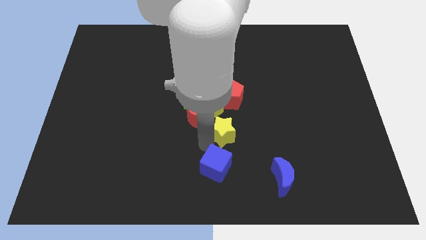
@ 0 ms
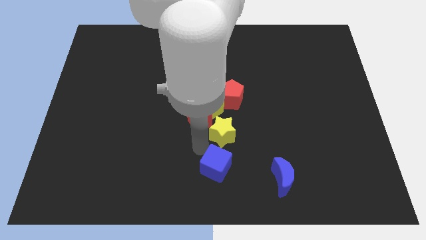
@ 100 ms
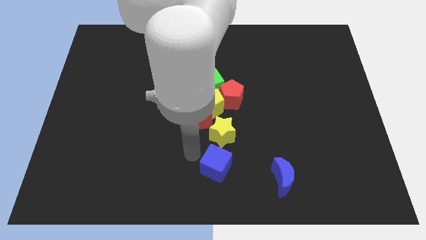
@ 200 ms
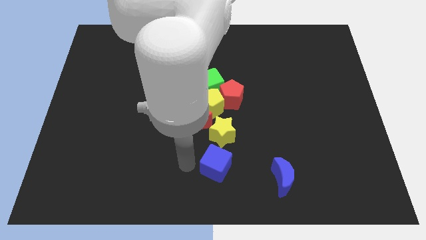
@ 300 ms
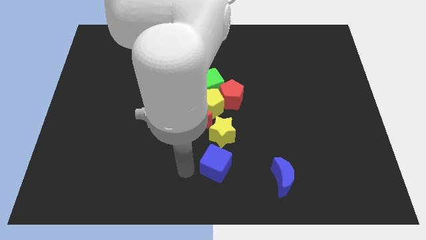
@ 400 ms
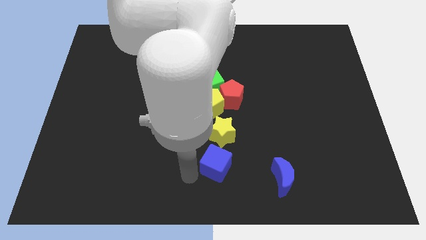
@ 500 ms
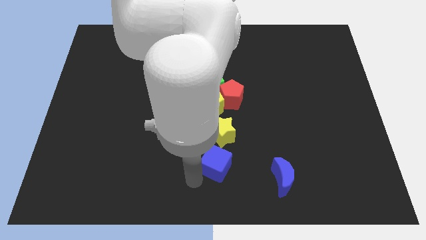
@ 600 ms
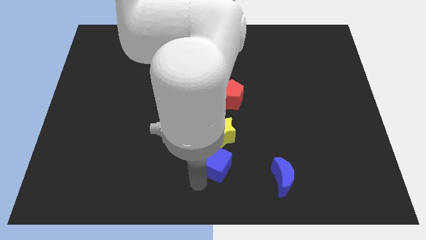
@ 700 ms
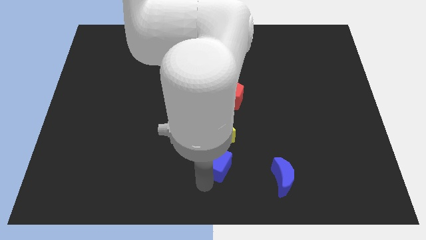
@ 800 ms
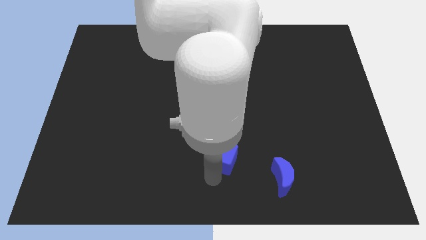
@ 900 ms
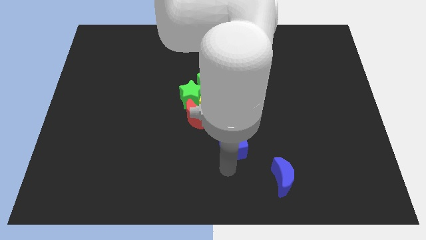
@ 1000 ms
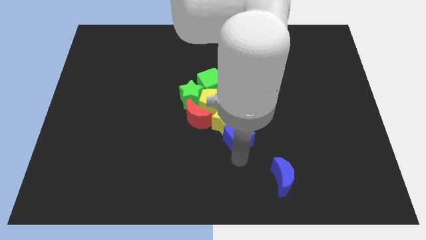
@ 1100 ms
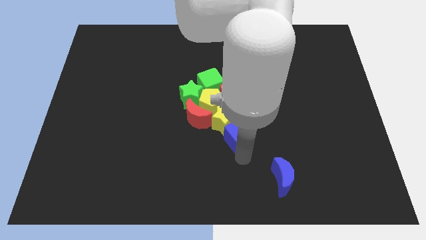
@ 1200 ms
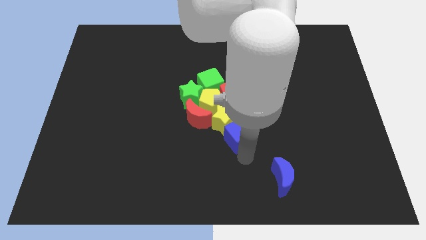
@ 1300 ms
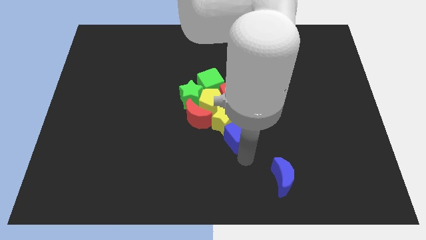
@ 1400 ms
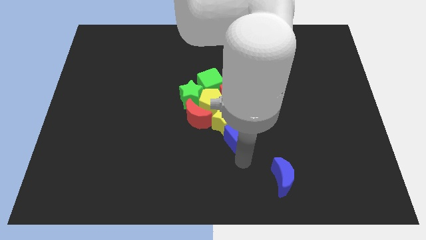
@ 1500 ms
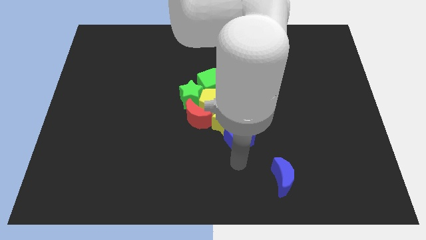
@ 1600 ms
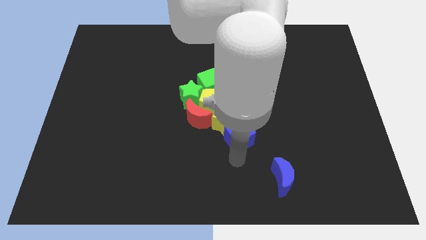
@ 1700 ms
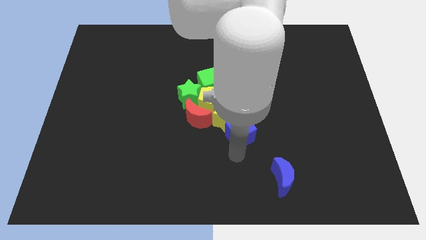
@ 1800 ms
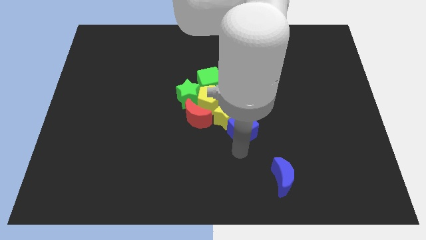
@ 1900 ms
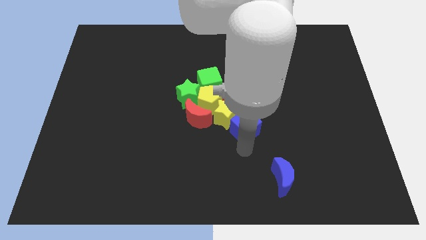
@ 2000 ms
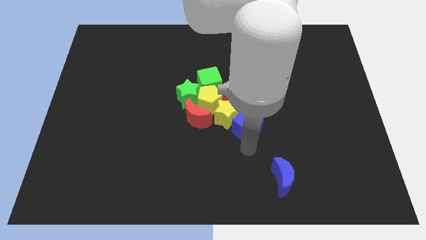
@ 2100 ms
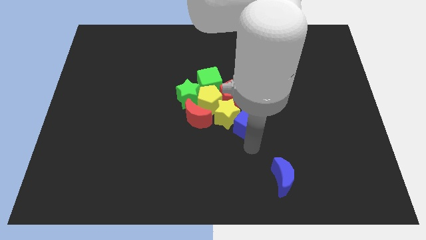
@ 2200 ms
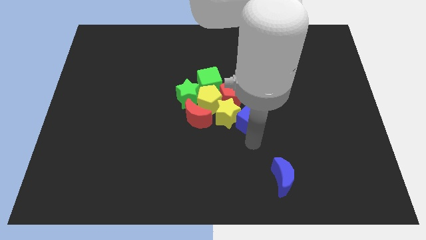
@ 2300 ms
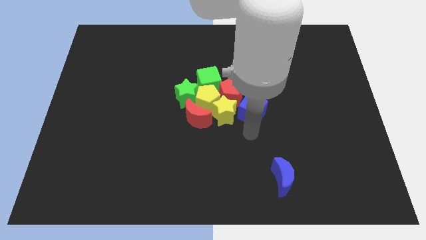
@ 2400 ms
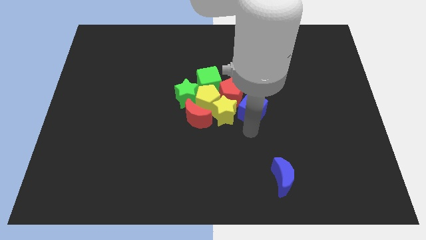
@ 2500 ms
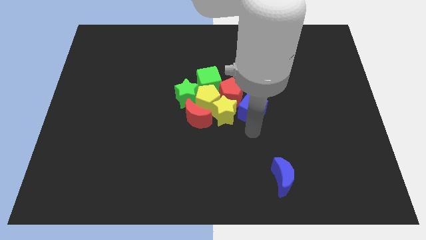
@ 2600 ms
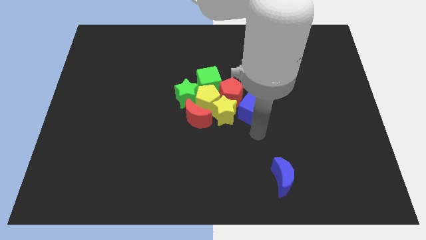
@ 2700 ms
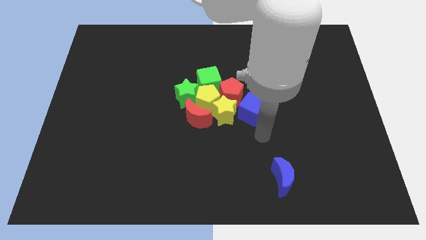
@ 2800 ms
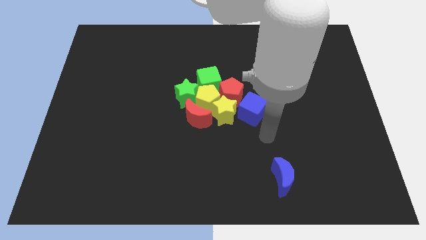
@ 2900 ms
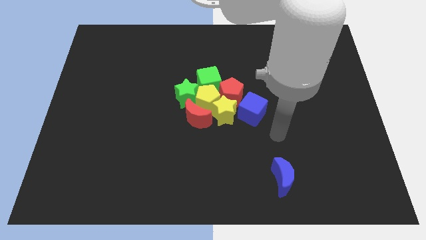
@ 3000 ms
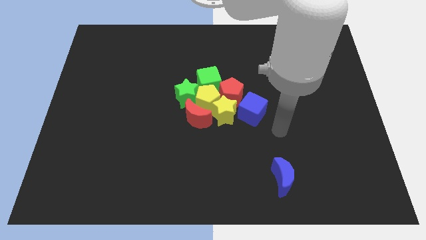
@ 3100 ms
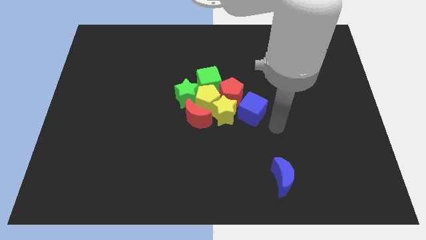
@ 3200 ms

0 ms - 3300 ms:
move the blue cube close to the right of the yellow star

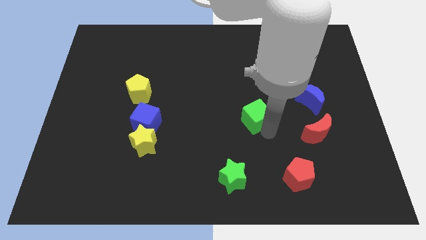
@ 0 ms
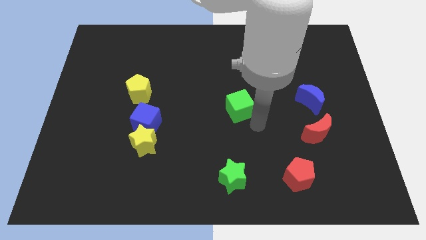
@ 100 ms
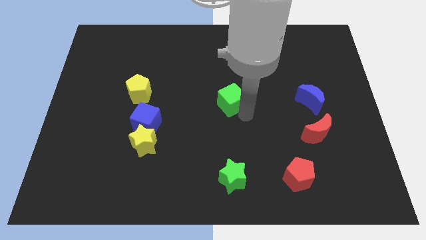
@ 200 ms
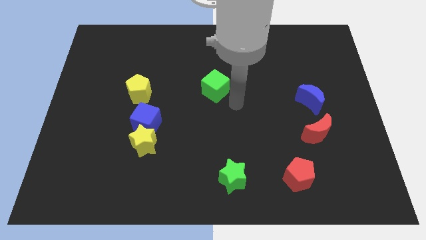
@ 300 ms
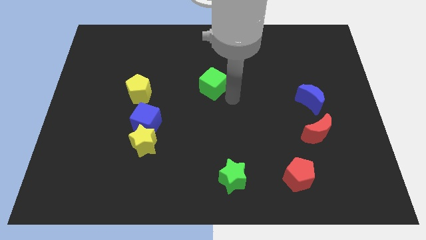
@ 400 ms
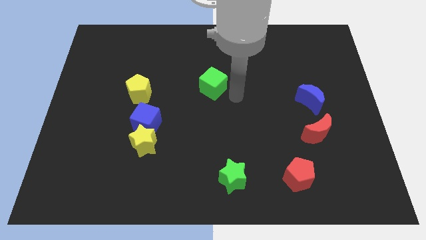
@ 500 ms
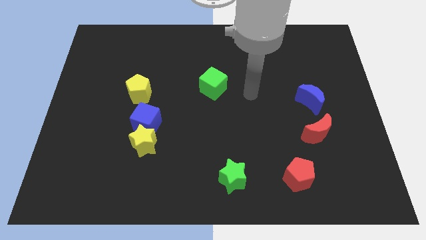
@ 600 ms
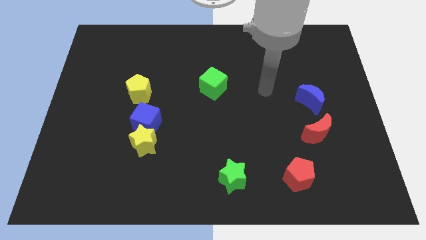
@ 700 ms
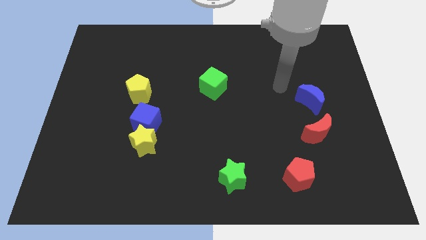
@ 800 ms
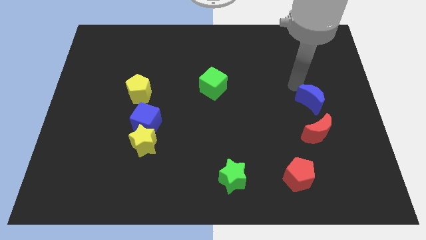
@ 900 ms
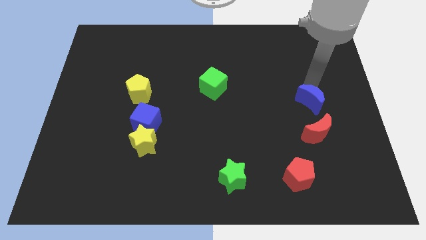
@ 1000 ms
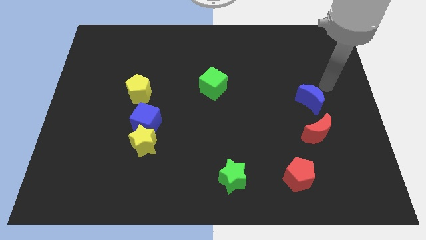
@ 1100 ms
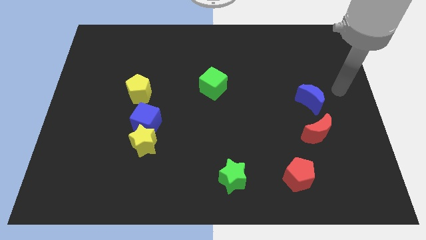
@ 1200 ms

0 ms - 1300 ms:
move the green cube to the center of the board

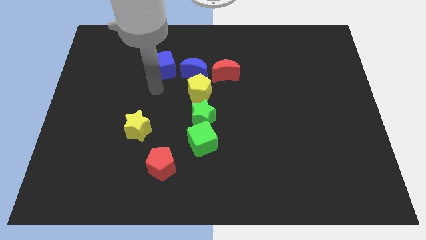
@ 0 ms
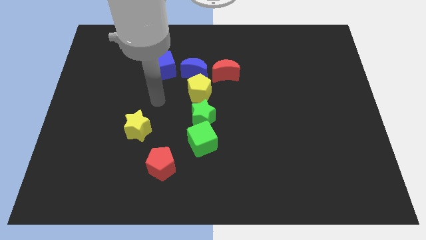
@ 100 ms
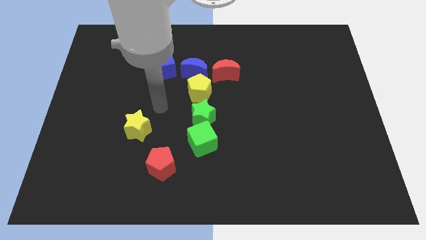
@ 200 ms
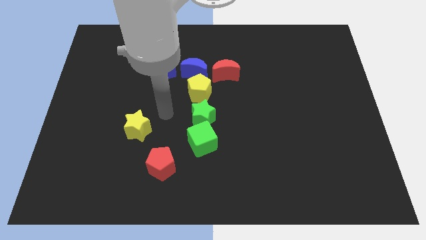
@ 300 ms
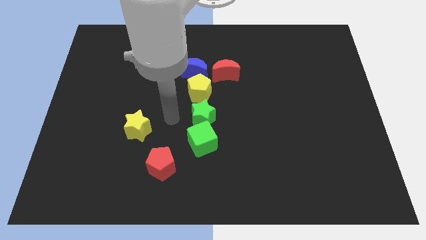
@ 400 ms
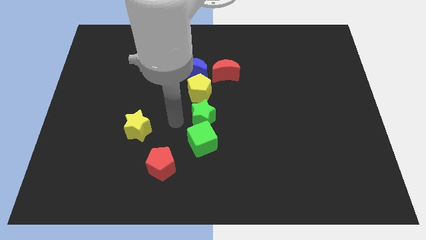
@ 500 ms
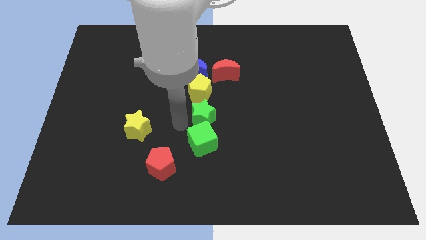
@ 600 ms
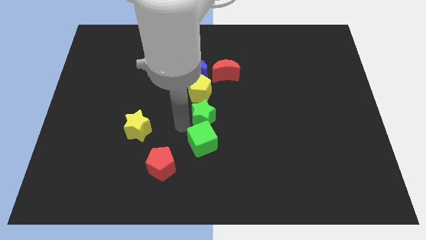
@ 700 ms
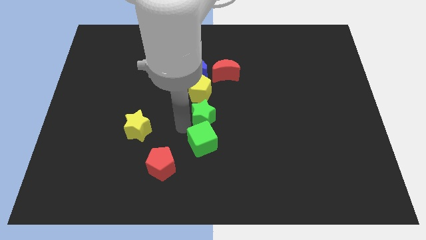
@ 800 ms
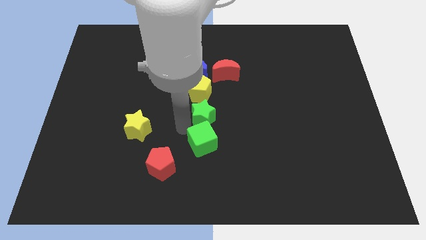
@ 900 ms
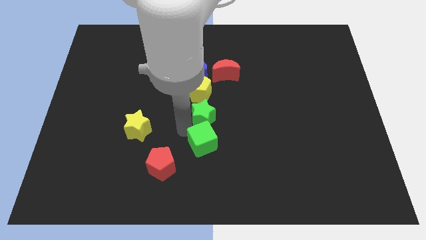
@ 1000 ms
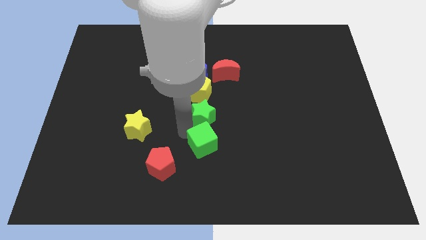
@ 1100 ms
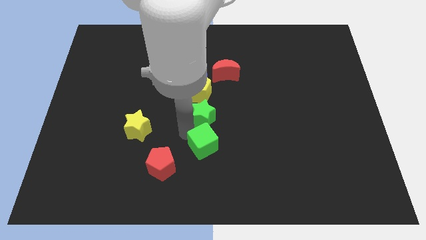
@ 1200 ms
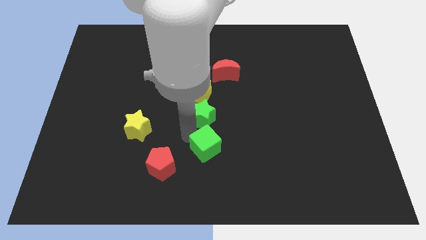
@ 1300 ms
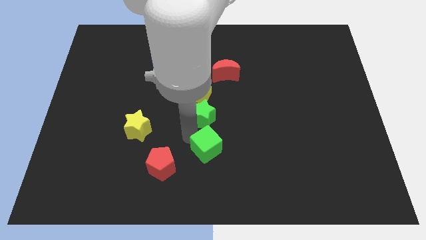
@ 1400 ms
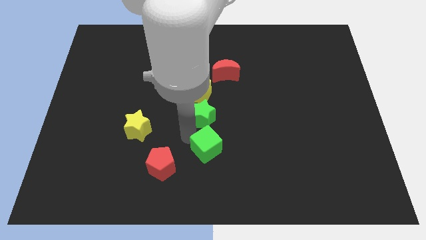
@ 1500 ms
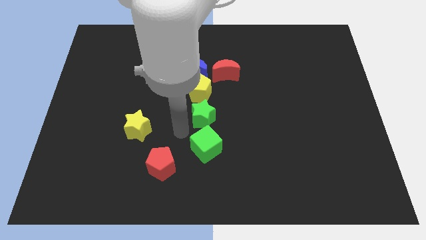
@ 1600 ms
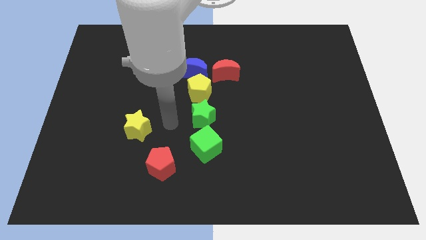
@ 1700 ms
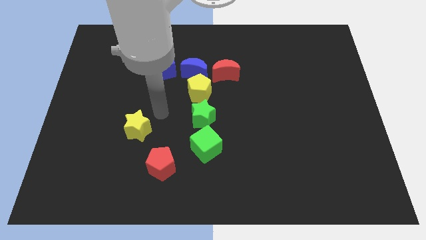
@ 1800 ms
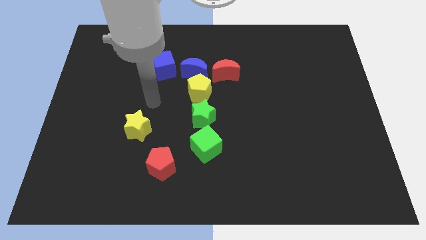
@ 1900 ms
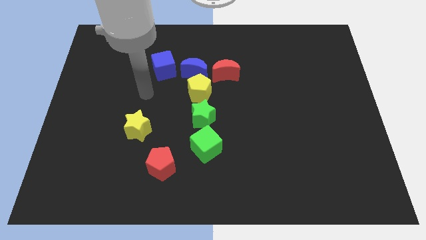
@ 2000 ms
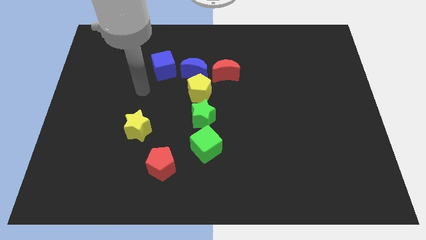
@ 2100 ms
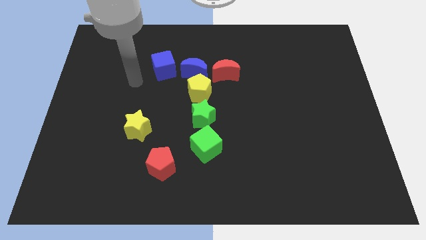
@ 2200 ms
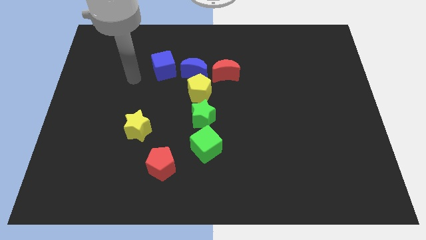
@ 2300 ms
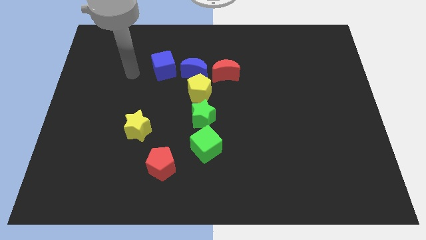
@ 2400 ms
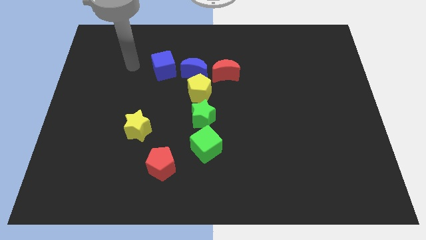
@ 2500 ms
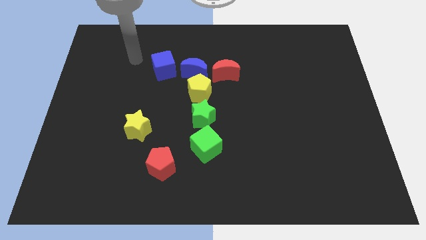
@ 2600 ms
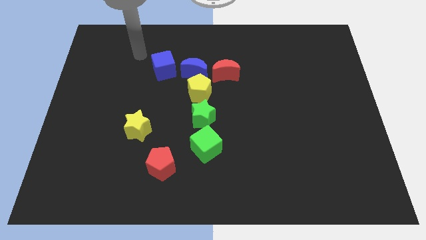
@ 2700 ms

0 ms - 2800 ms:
slightly push the green cube towards the bottom center of the board

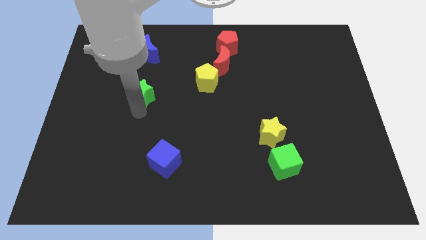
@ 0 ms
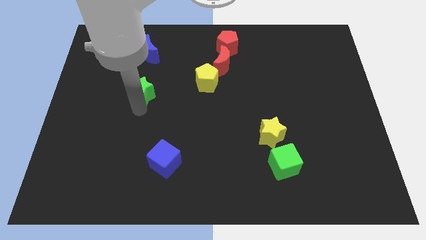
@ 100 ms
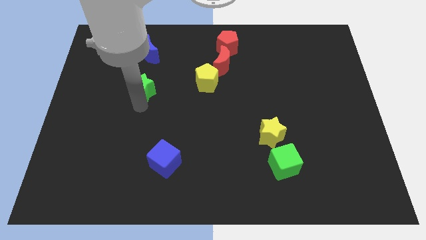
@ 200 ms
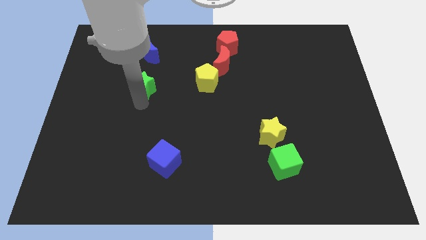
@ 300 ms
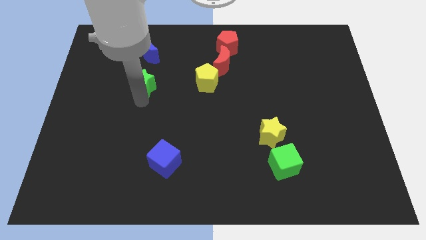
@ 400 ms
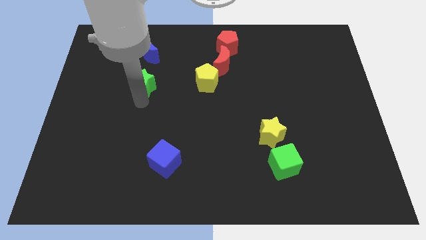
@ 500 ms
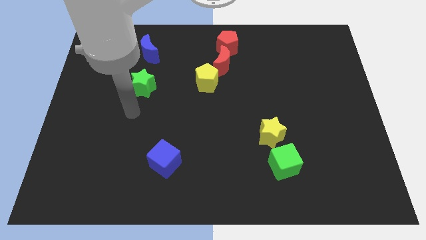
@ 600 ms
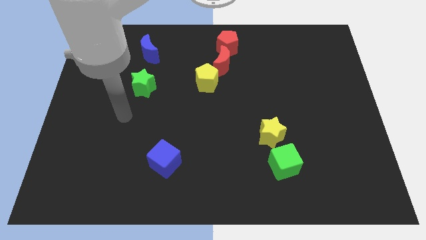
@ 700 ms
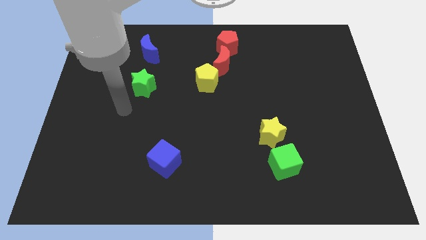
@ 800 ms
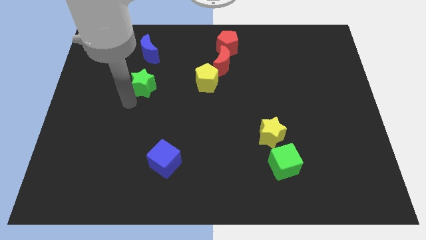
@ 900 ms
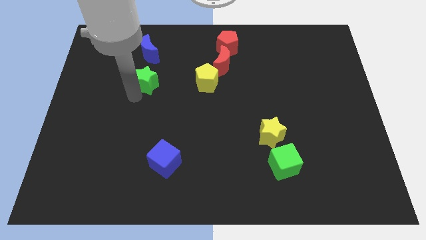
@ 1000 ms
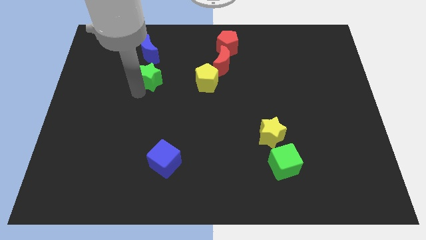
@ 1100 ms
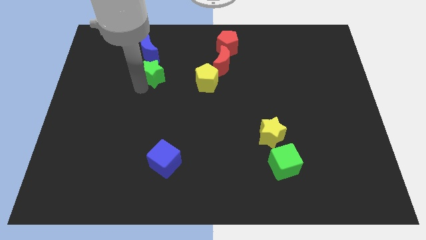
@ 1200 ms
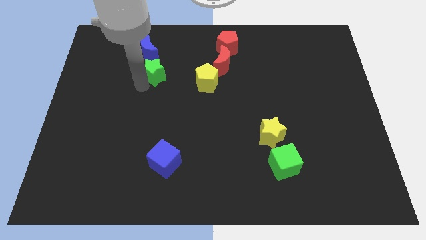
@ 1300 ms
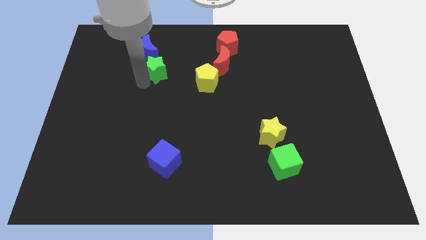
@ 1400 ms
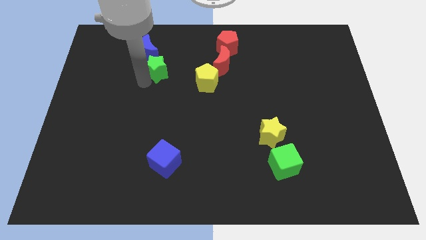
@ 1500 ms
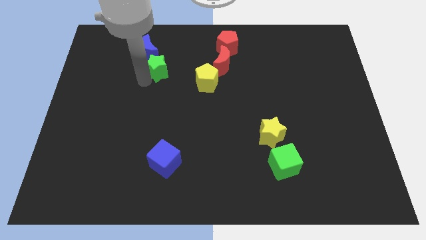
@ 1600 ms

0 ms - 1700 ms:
push the green star into the blue moon
